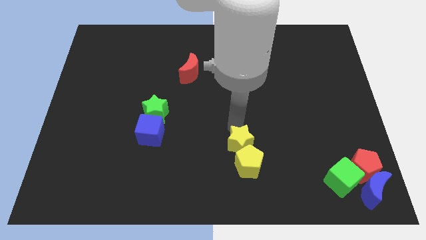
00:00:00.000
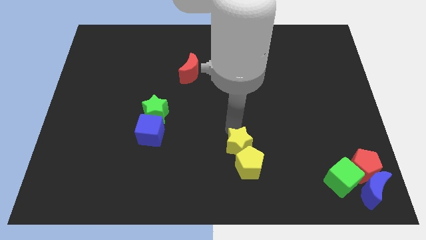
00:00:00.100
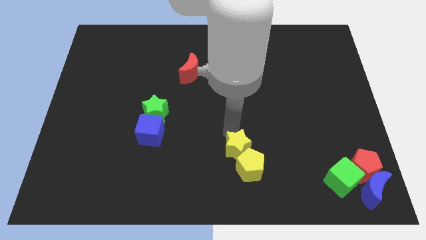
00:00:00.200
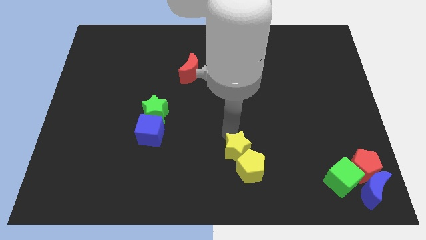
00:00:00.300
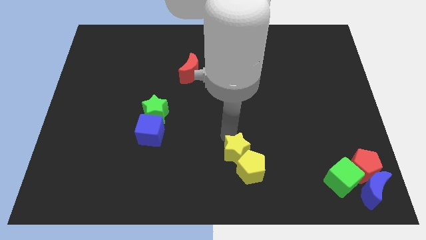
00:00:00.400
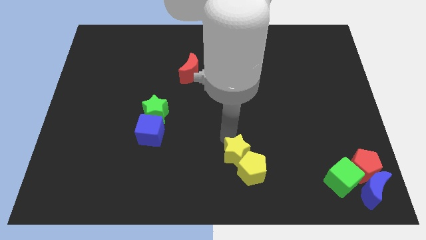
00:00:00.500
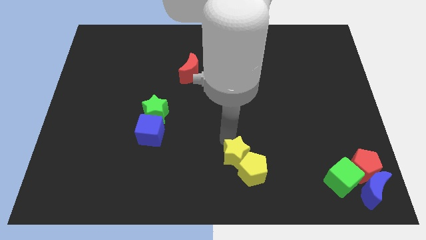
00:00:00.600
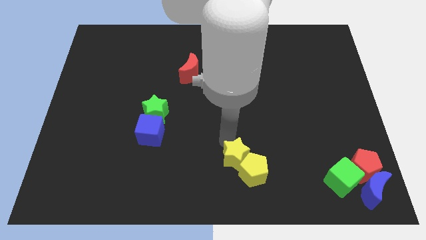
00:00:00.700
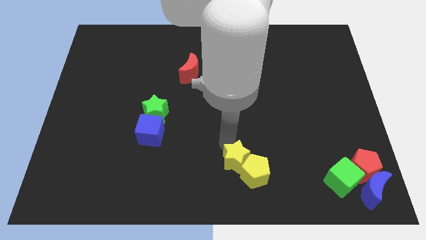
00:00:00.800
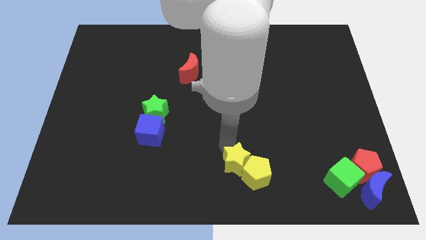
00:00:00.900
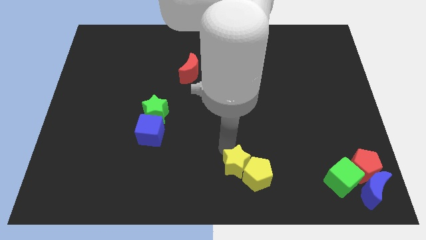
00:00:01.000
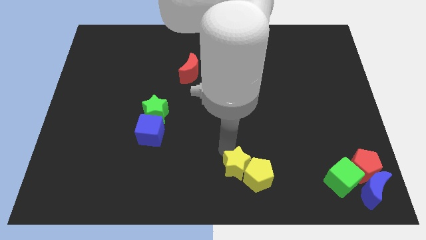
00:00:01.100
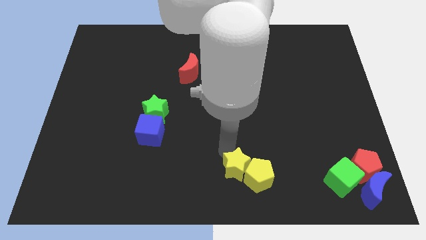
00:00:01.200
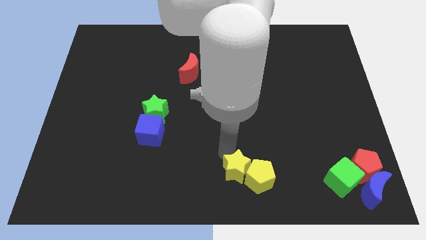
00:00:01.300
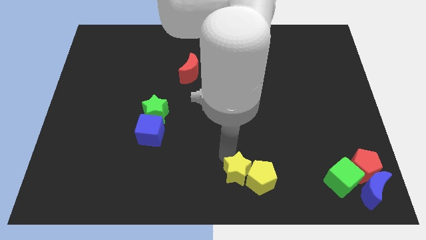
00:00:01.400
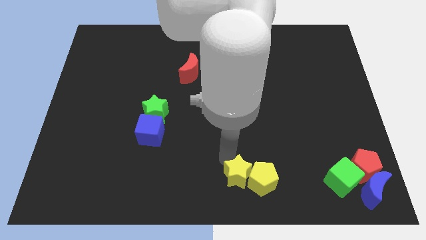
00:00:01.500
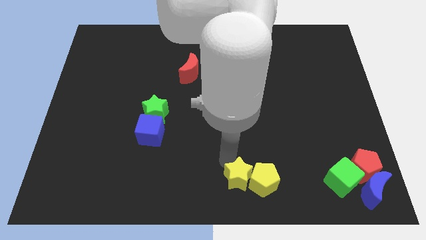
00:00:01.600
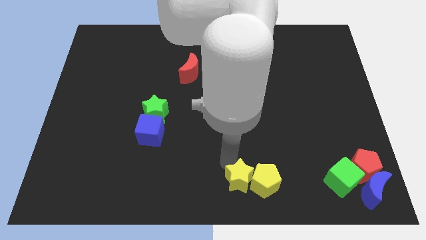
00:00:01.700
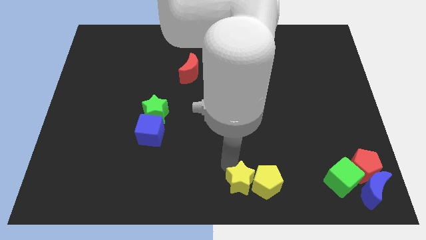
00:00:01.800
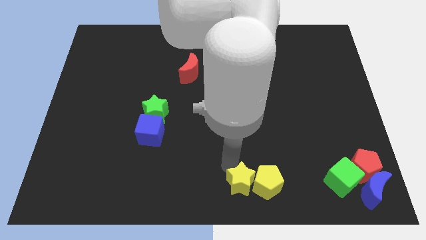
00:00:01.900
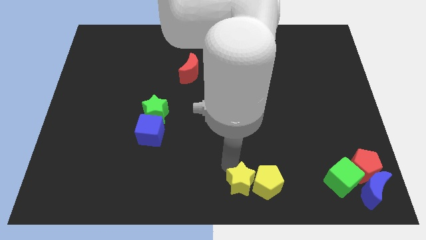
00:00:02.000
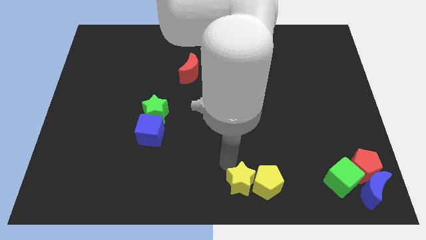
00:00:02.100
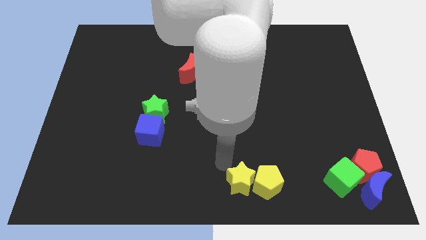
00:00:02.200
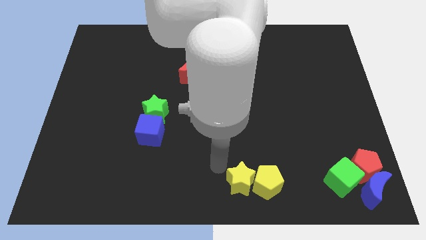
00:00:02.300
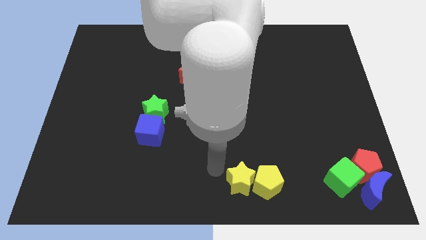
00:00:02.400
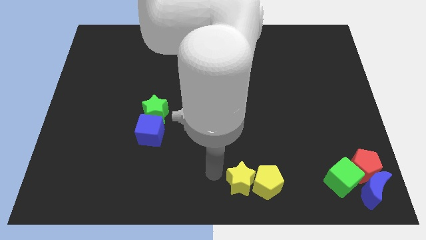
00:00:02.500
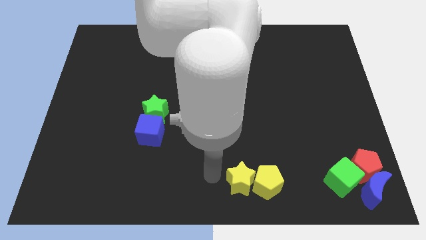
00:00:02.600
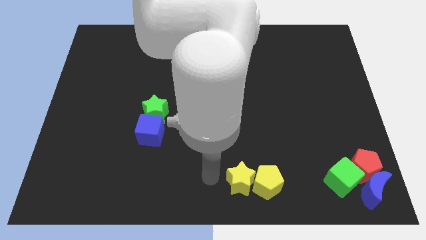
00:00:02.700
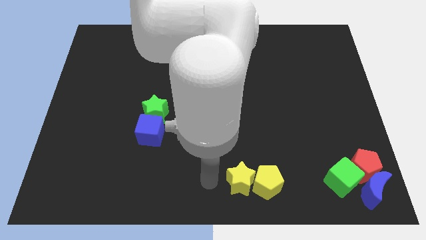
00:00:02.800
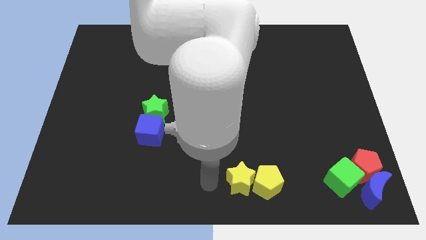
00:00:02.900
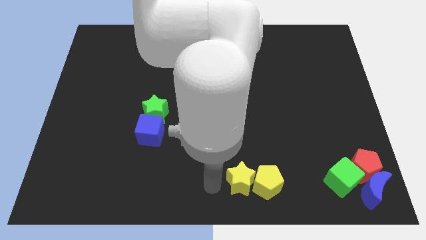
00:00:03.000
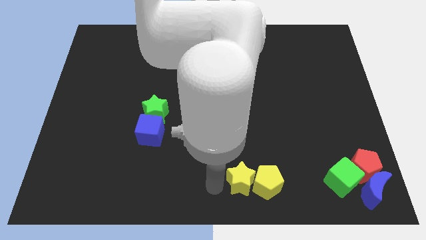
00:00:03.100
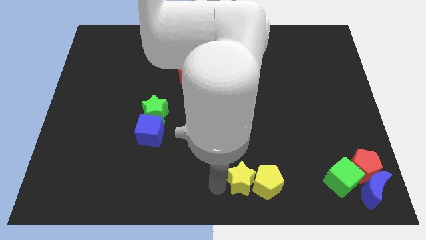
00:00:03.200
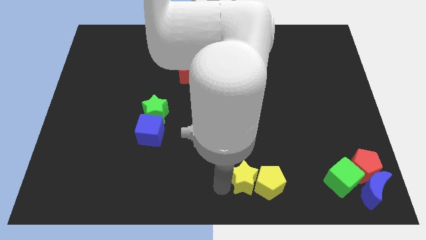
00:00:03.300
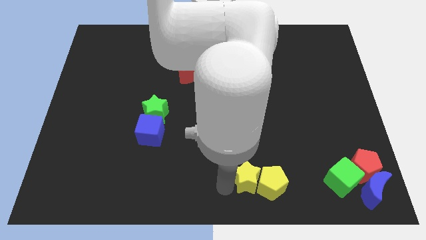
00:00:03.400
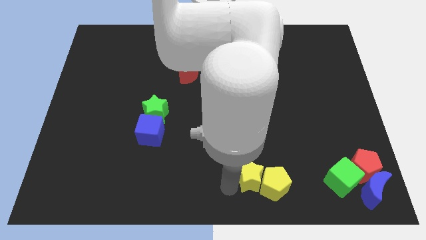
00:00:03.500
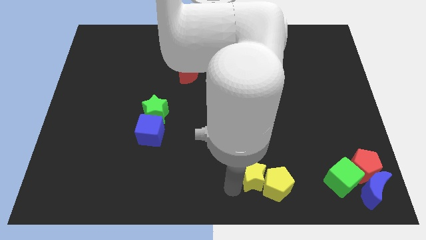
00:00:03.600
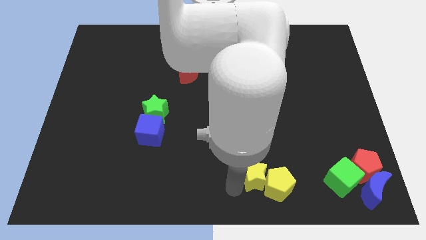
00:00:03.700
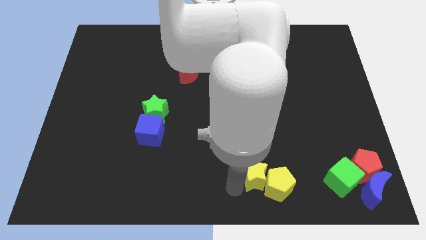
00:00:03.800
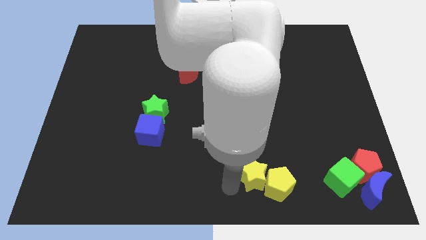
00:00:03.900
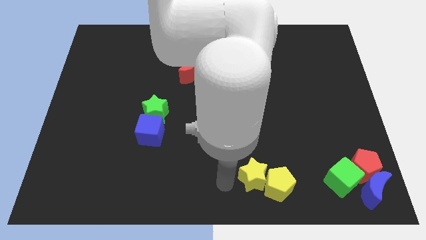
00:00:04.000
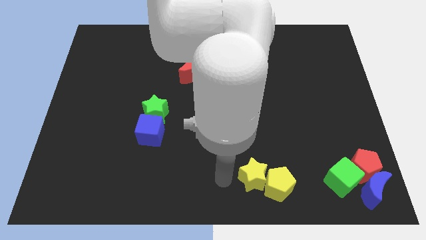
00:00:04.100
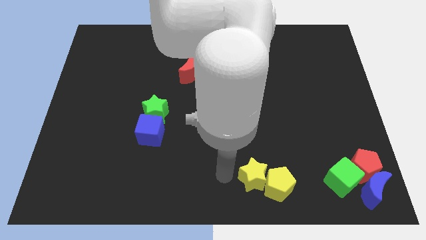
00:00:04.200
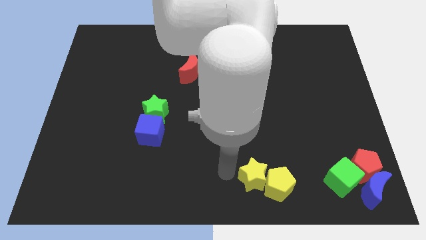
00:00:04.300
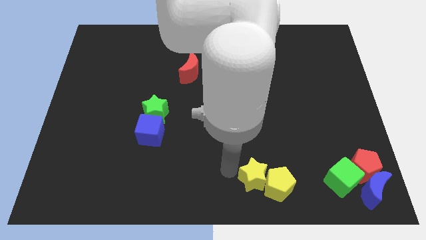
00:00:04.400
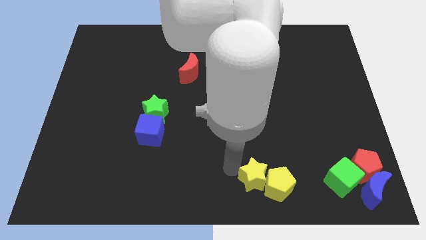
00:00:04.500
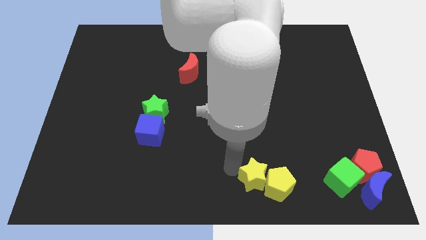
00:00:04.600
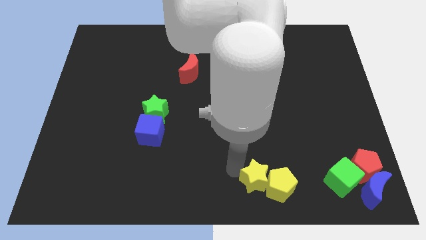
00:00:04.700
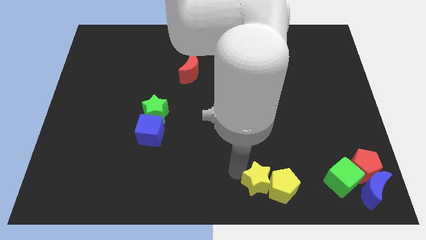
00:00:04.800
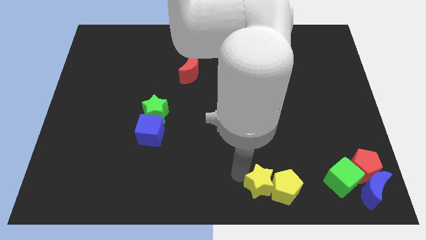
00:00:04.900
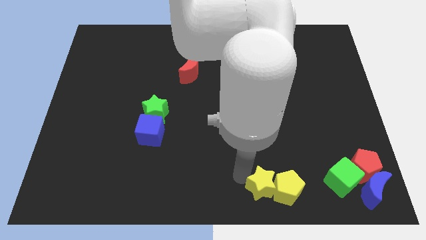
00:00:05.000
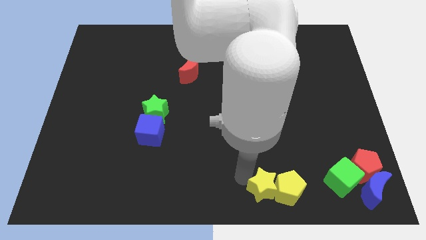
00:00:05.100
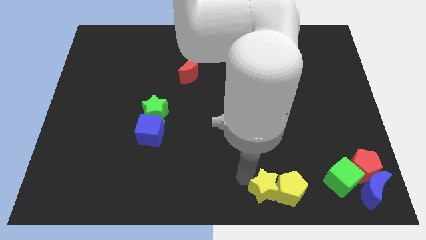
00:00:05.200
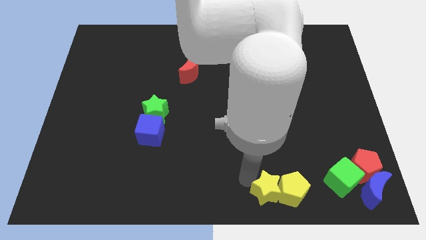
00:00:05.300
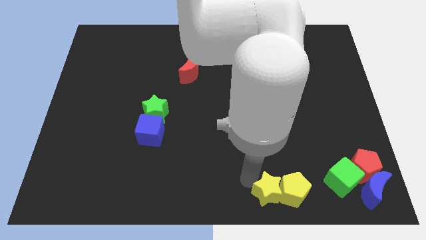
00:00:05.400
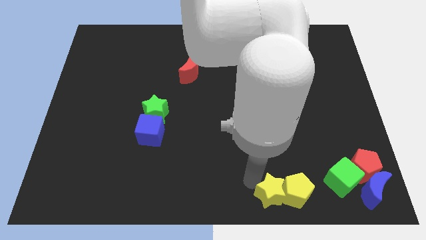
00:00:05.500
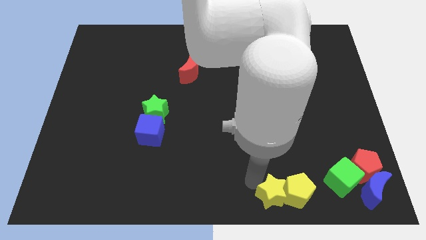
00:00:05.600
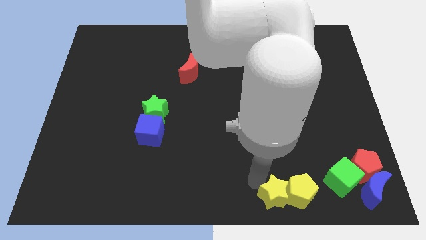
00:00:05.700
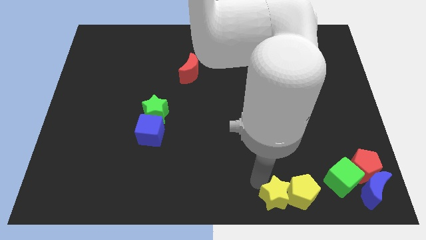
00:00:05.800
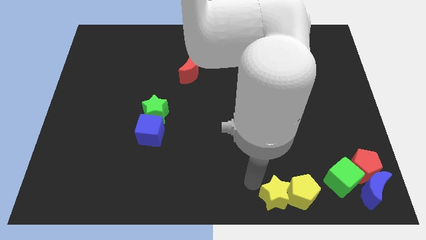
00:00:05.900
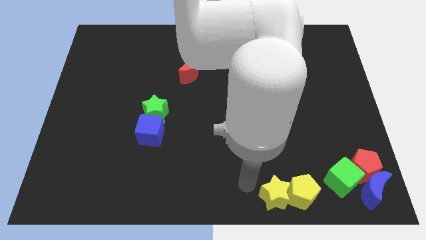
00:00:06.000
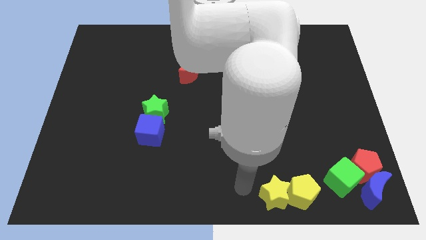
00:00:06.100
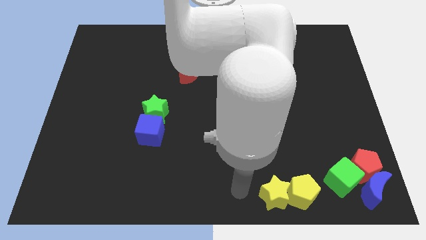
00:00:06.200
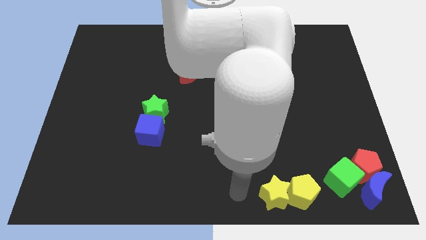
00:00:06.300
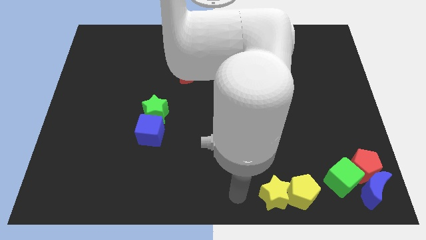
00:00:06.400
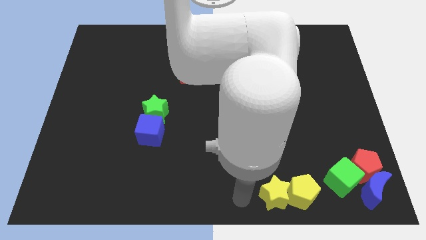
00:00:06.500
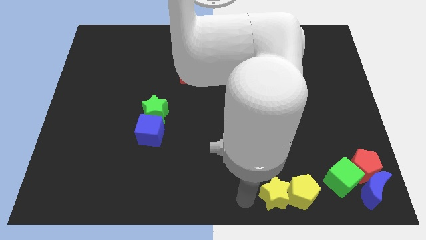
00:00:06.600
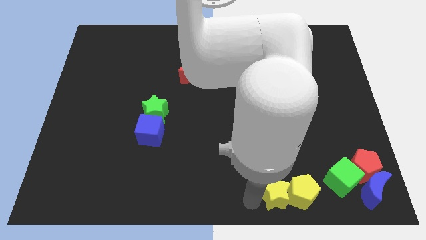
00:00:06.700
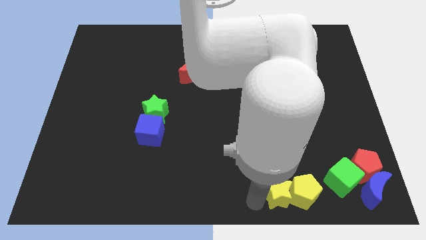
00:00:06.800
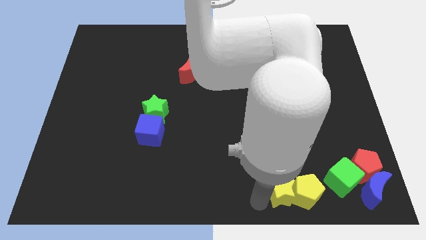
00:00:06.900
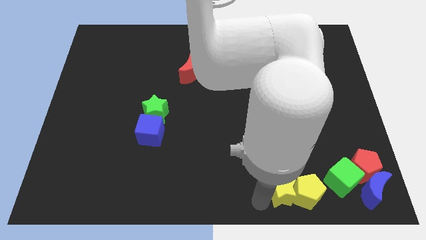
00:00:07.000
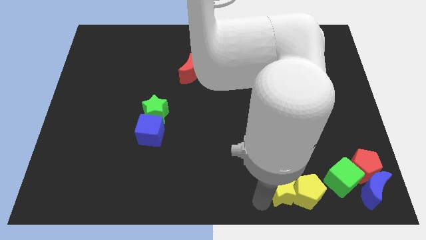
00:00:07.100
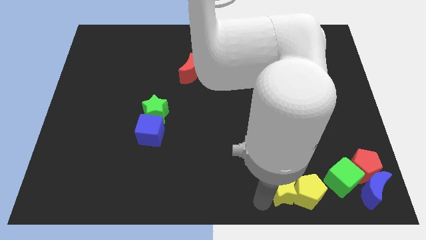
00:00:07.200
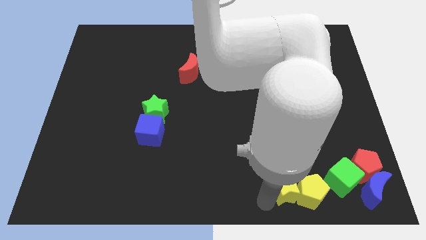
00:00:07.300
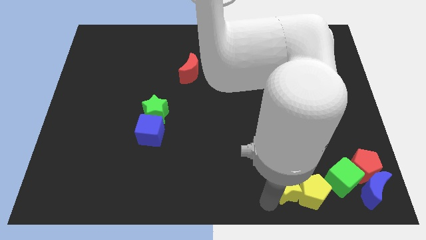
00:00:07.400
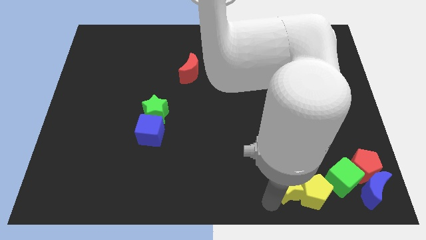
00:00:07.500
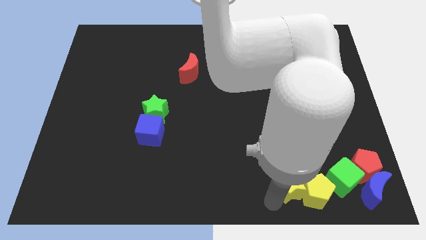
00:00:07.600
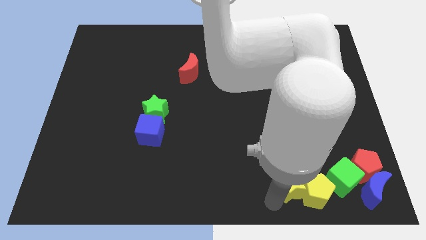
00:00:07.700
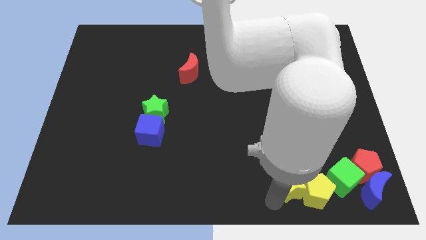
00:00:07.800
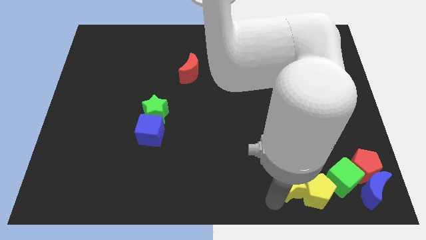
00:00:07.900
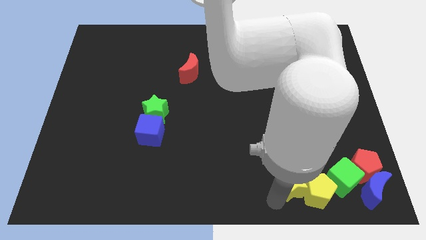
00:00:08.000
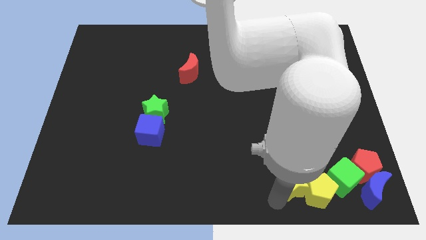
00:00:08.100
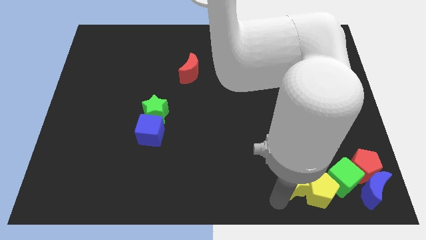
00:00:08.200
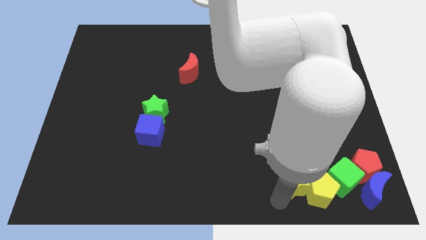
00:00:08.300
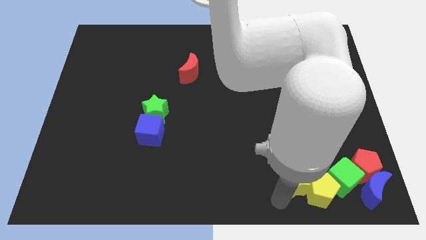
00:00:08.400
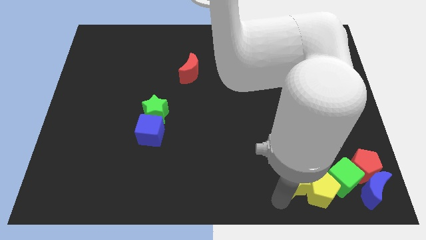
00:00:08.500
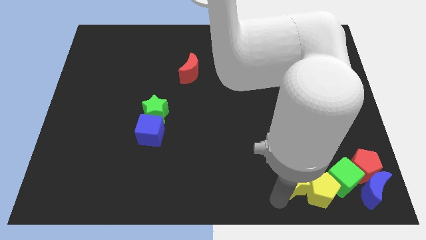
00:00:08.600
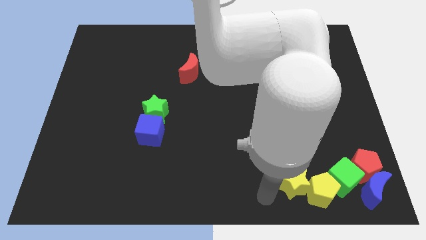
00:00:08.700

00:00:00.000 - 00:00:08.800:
move yellow star and yellow pentagon into the green cube

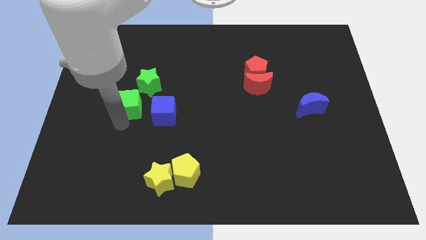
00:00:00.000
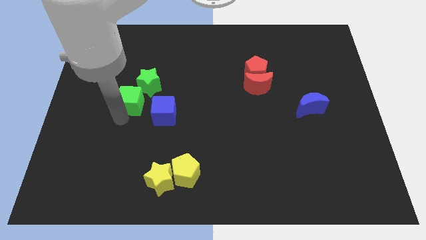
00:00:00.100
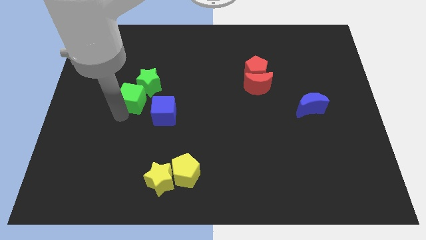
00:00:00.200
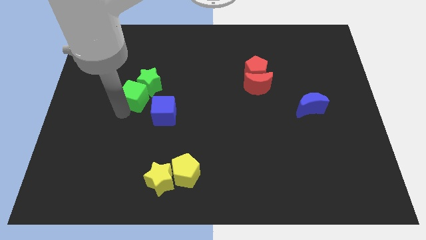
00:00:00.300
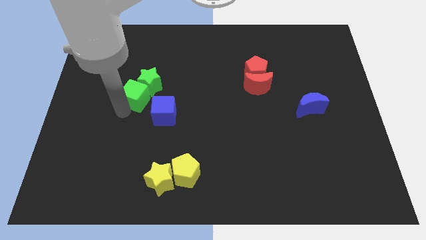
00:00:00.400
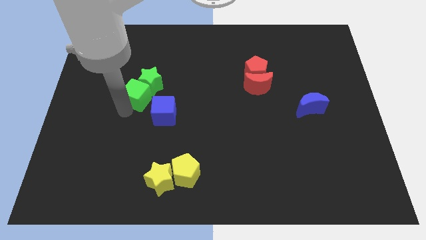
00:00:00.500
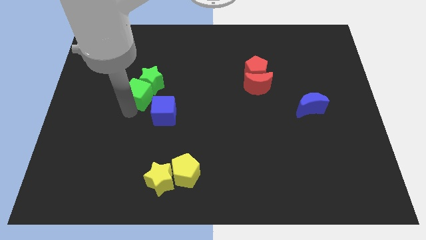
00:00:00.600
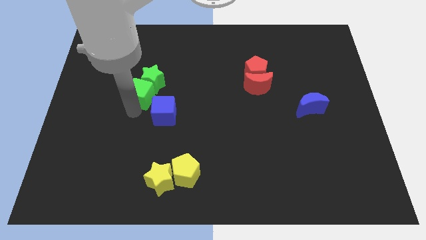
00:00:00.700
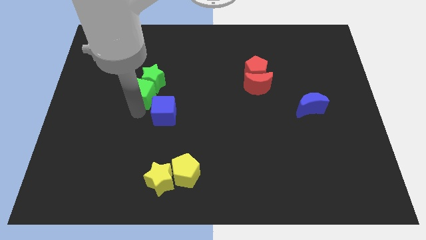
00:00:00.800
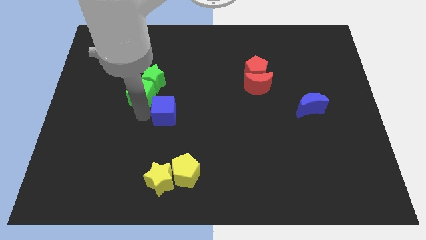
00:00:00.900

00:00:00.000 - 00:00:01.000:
push the green cube into the green star
